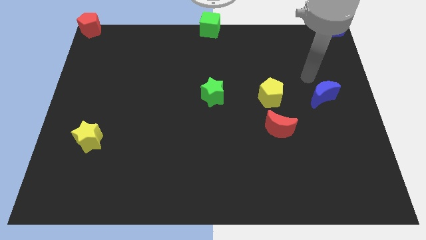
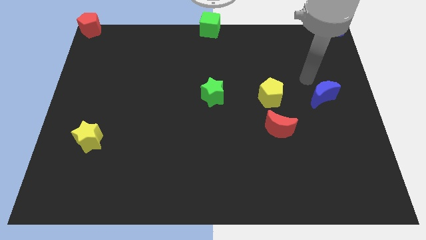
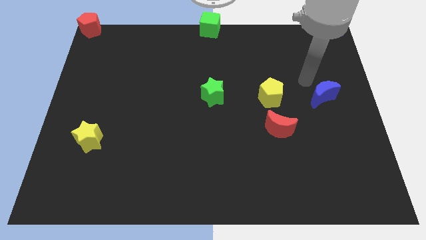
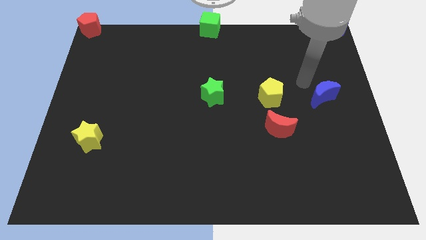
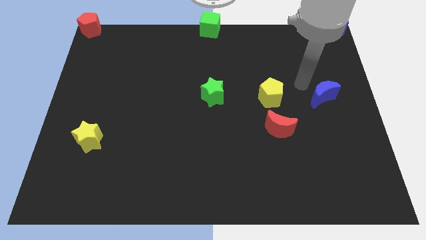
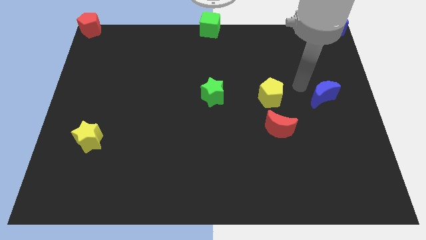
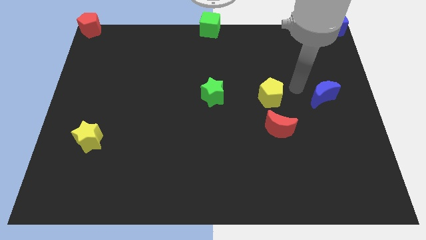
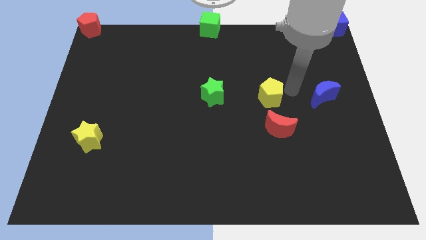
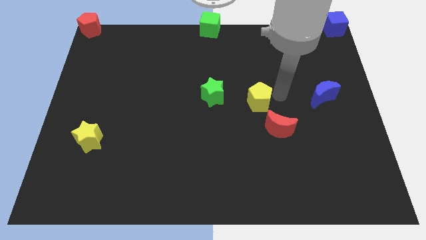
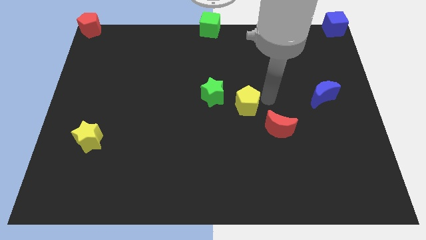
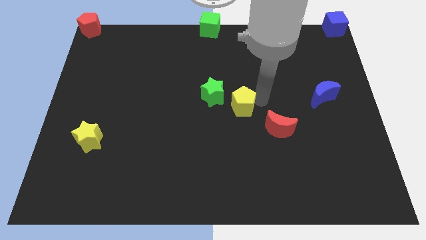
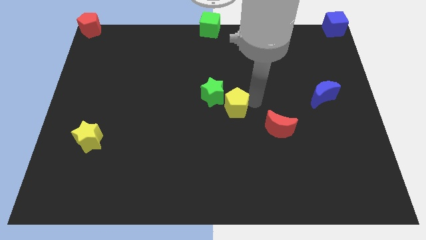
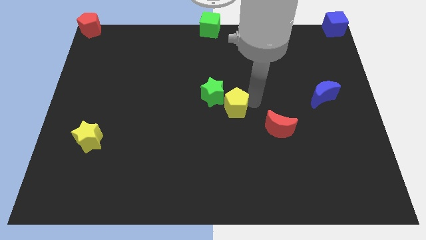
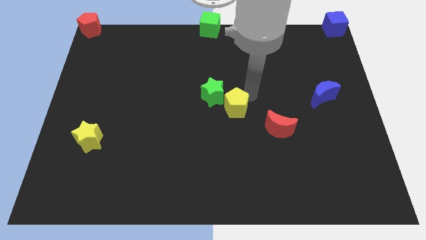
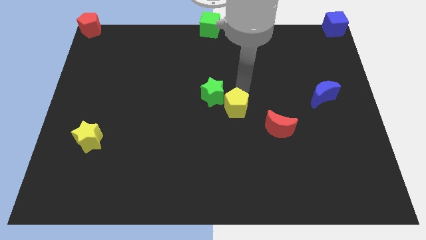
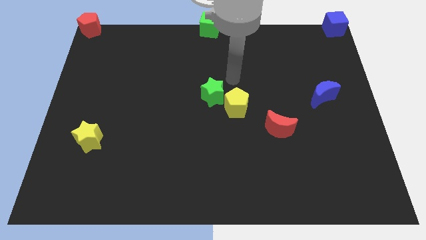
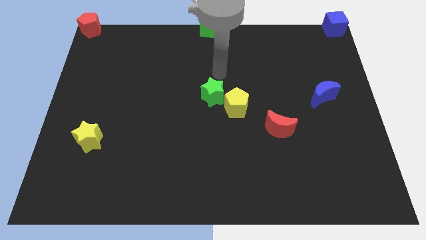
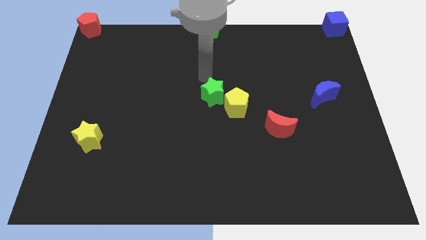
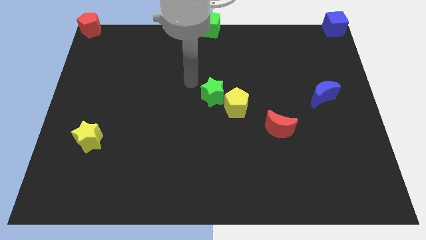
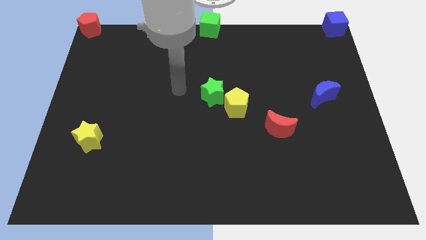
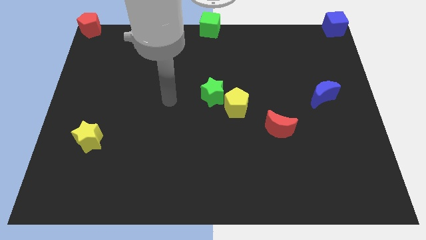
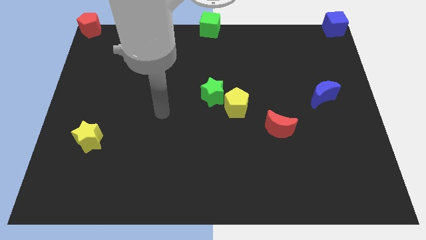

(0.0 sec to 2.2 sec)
move yellow pentagon into green star

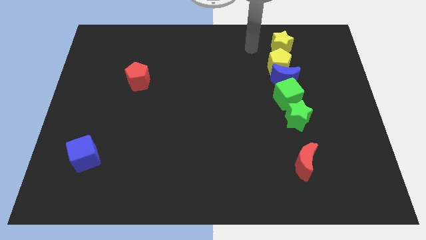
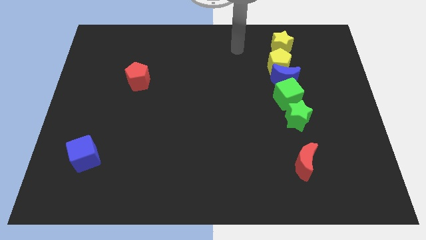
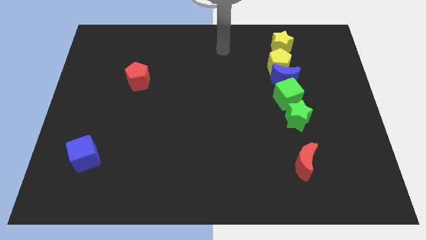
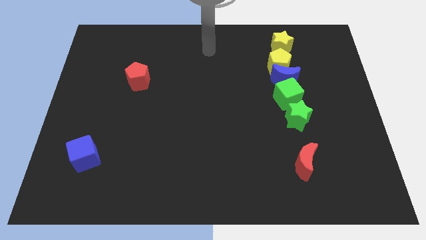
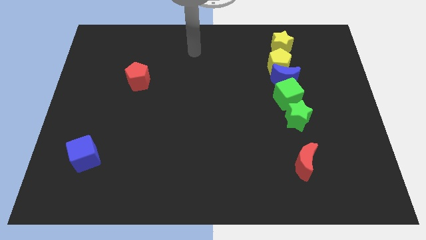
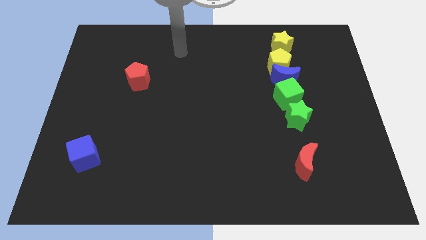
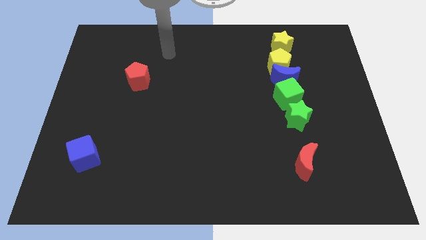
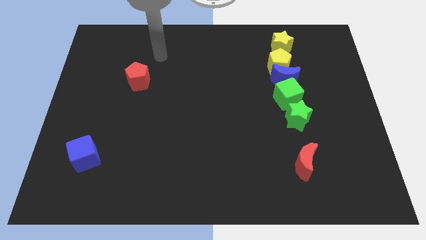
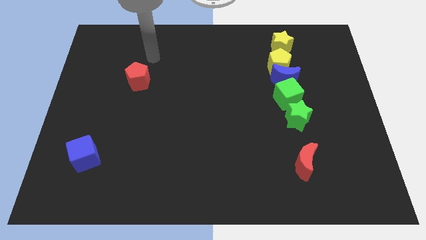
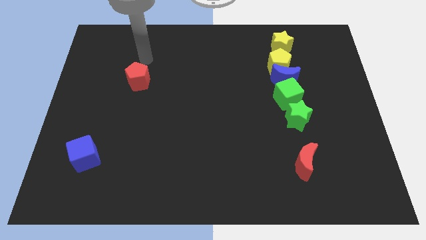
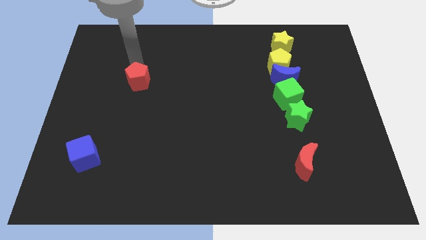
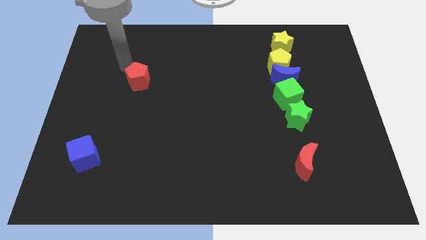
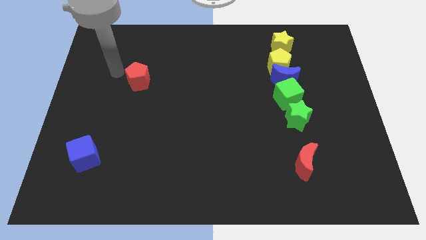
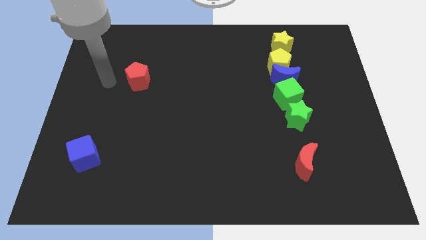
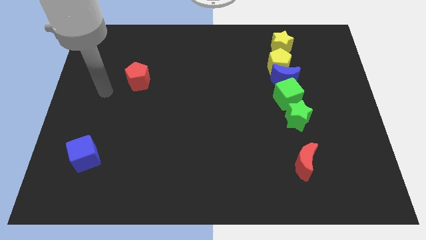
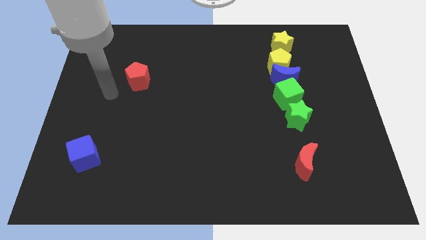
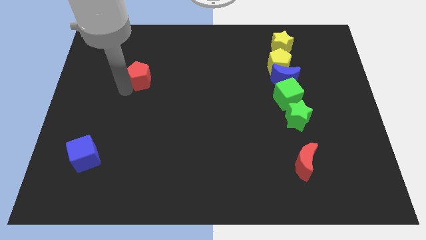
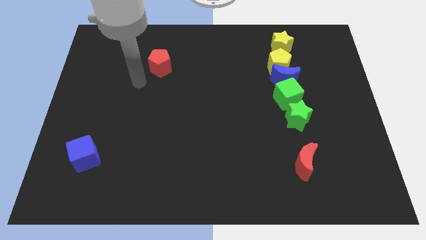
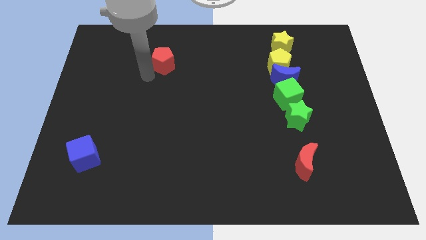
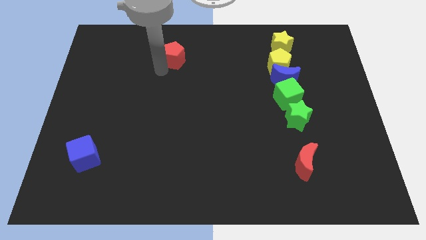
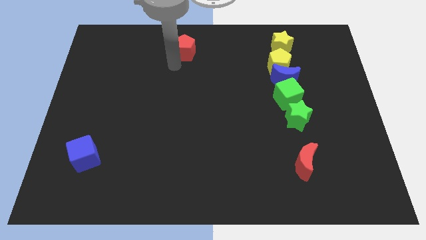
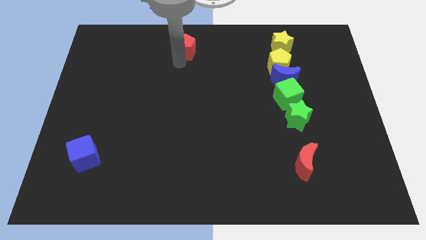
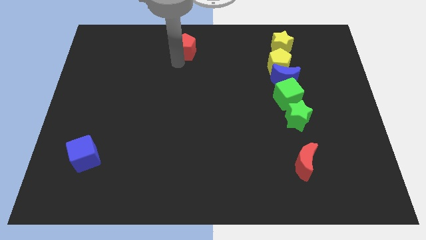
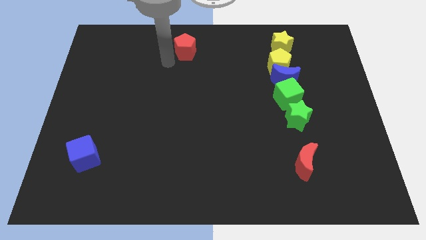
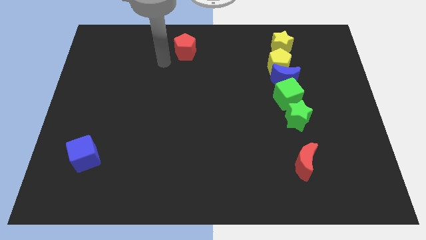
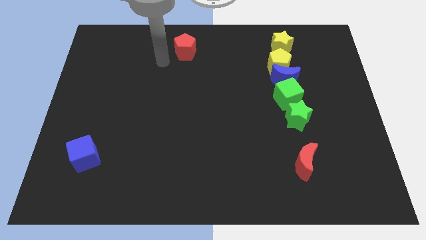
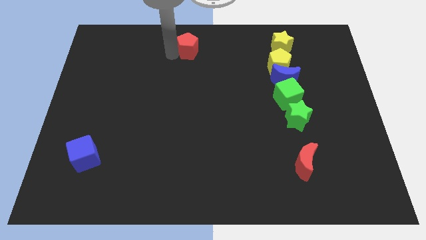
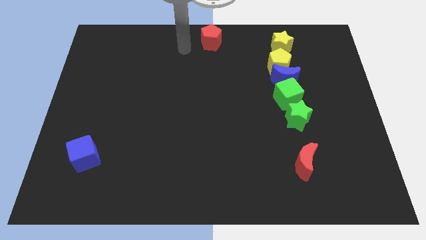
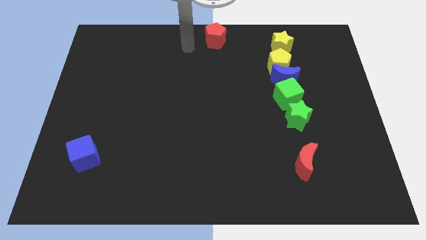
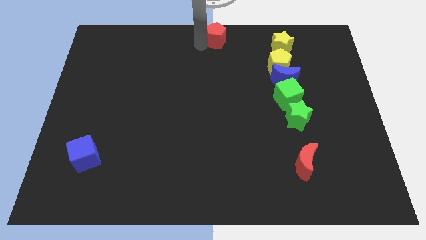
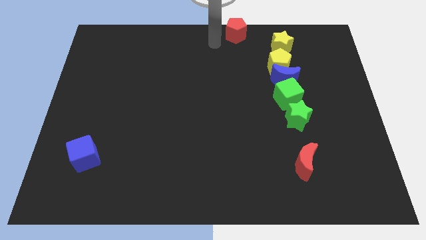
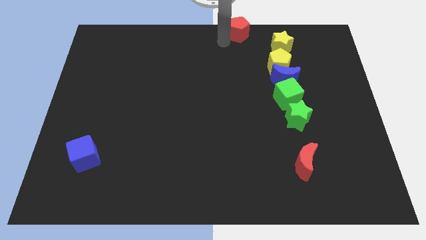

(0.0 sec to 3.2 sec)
place the red pentagon at the top center of the board

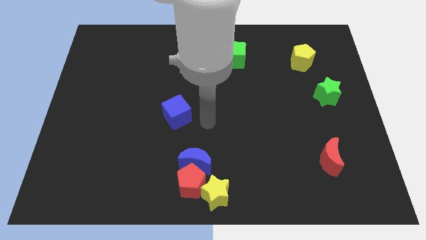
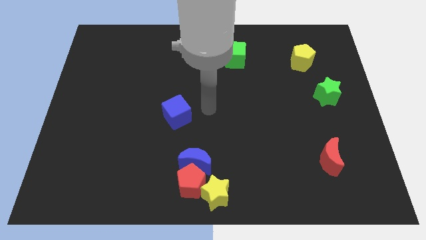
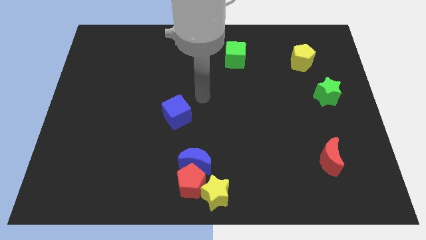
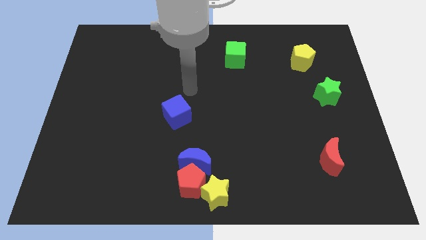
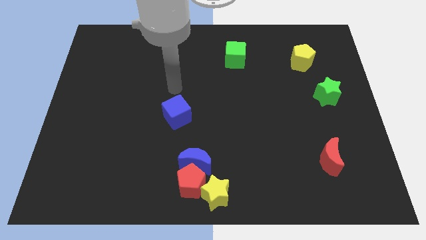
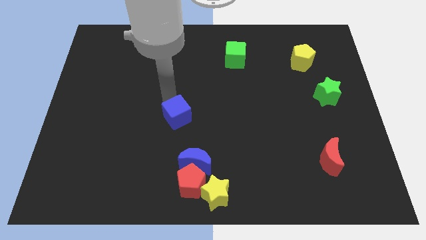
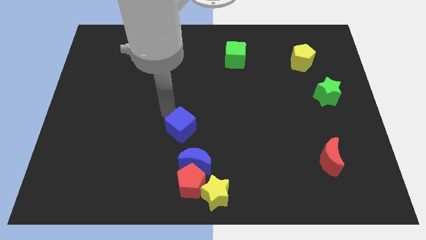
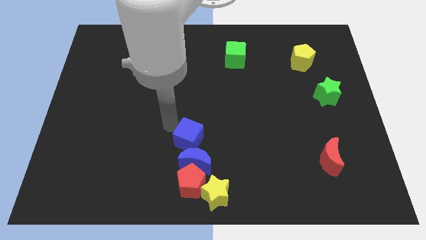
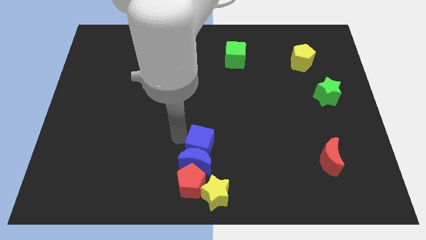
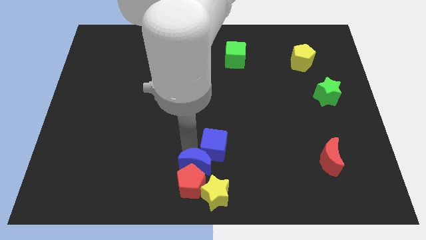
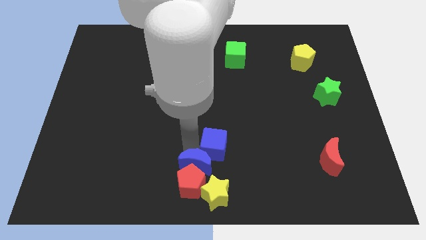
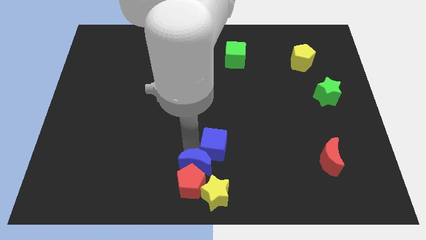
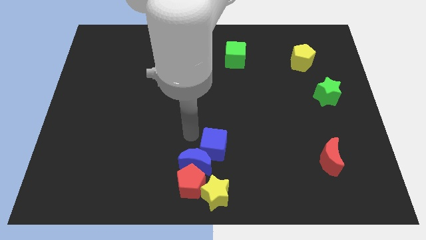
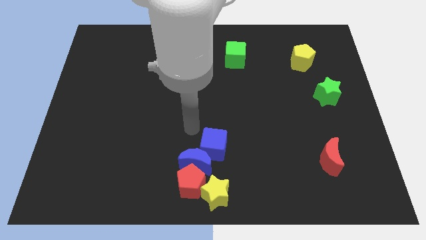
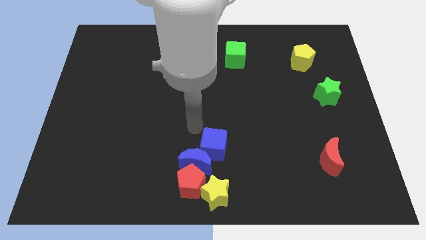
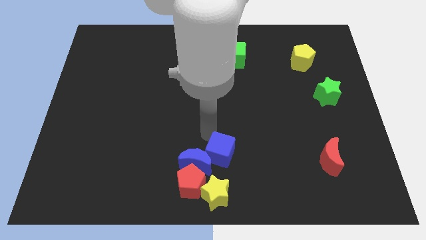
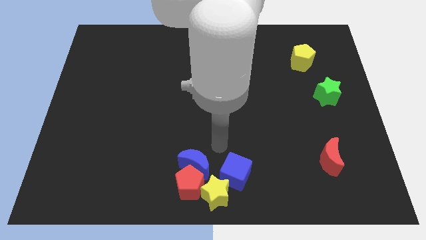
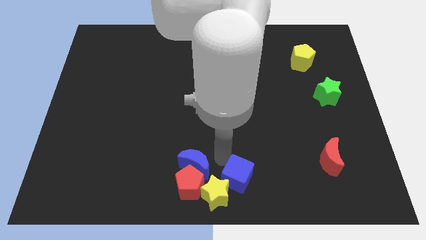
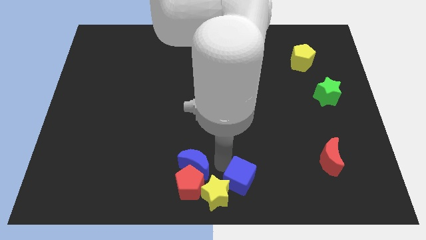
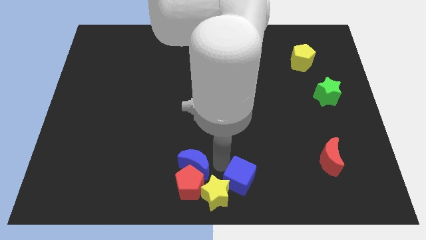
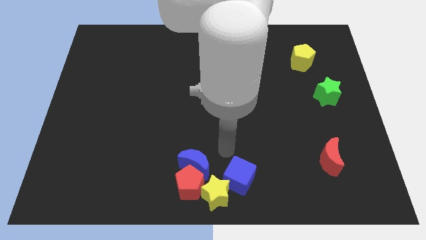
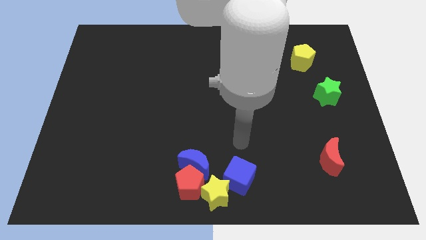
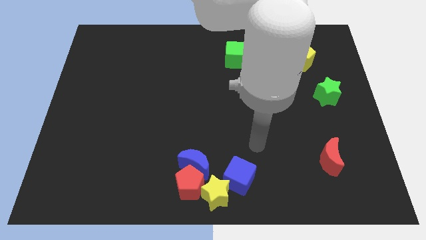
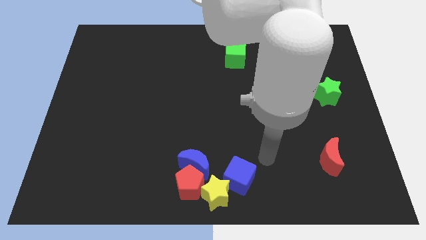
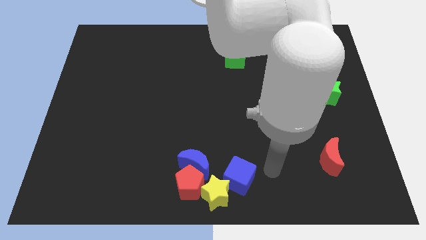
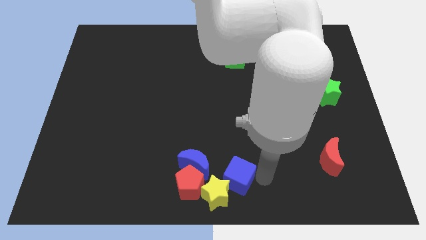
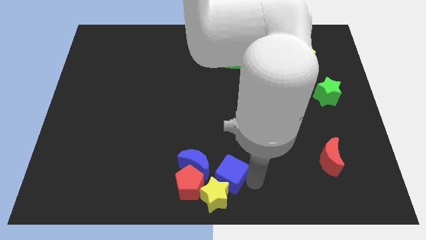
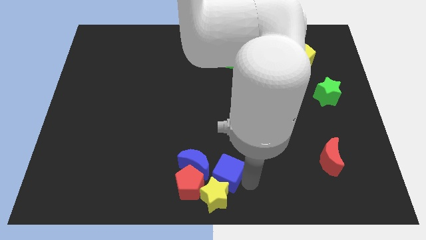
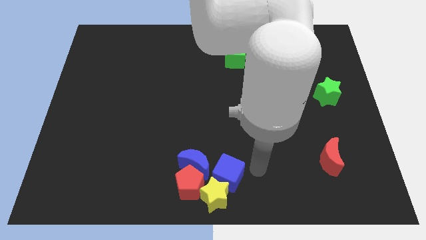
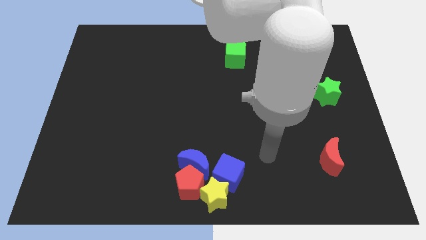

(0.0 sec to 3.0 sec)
place the blue cube above the yellow star

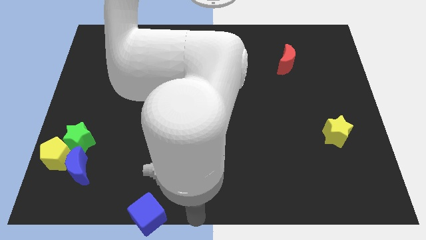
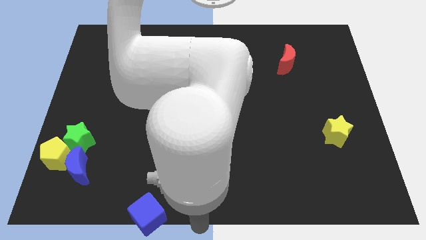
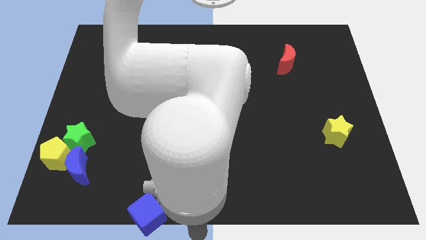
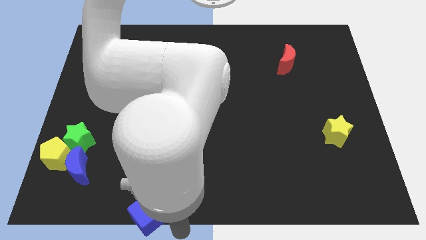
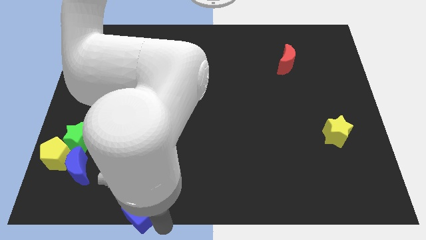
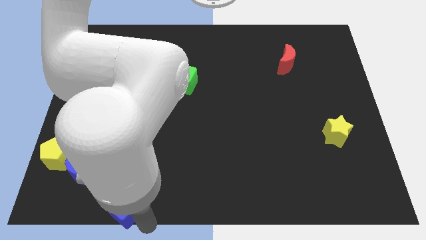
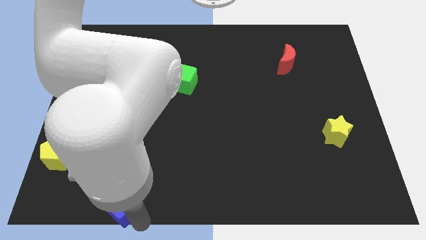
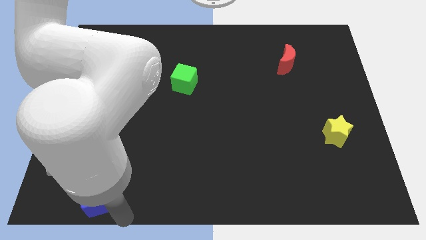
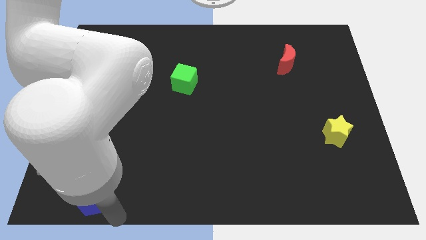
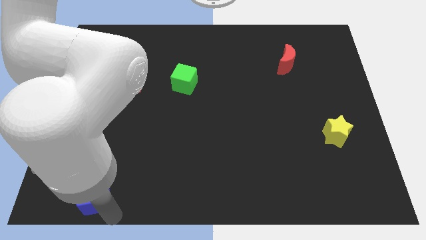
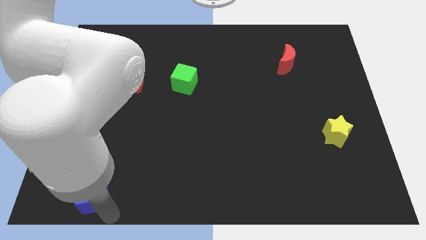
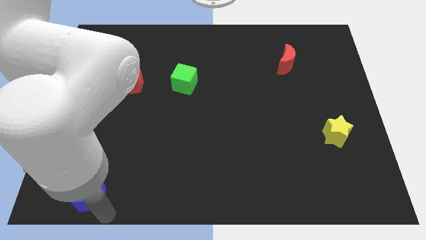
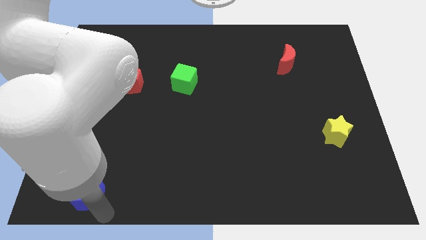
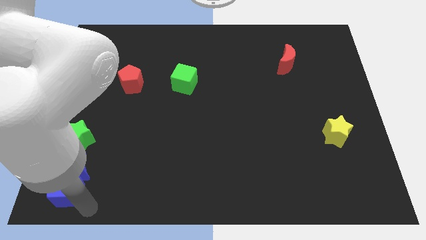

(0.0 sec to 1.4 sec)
move the blue cube below the blue crescent
